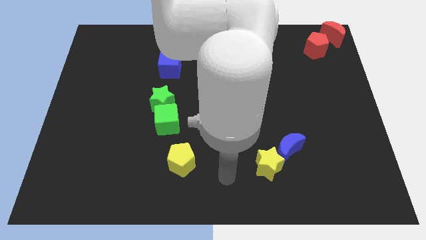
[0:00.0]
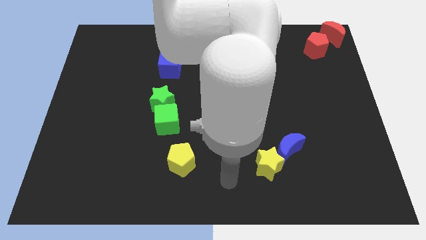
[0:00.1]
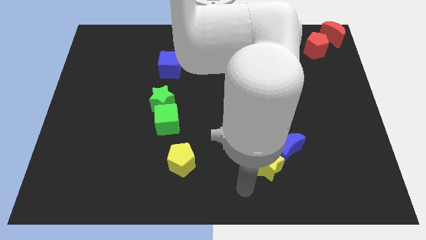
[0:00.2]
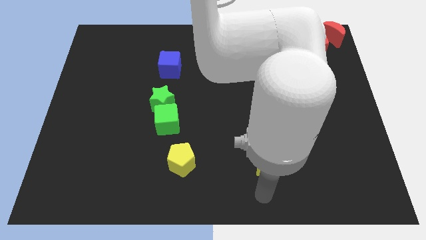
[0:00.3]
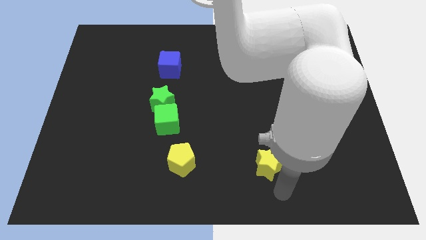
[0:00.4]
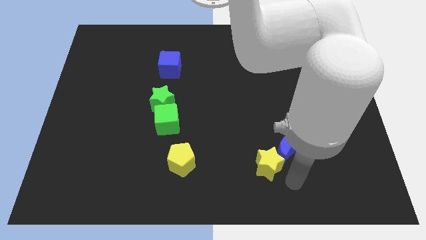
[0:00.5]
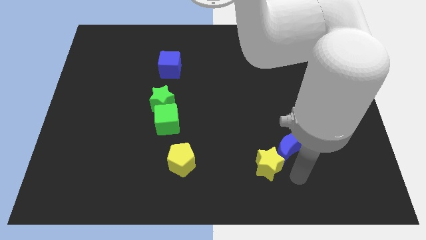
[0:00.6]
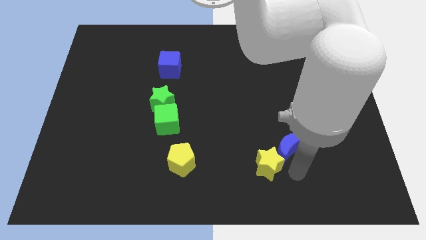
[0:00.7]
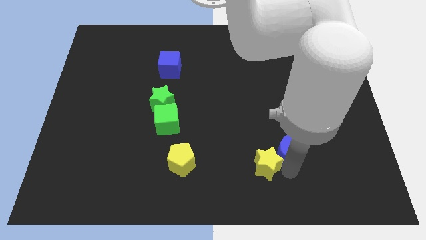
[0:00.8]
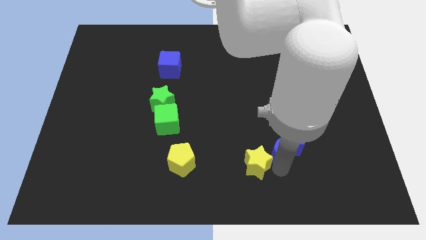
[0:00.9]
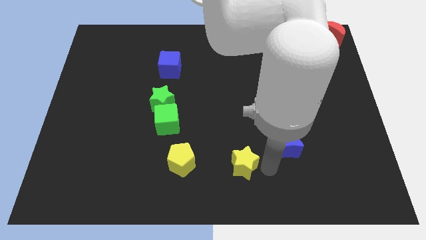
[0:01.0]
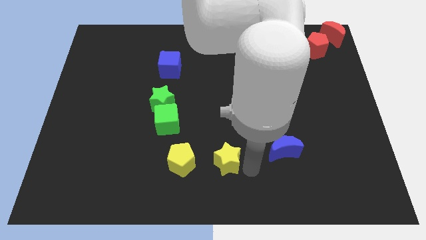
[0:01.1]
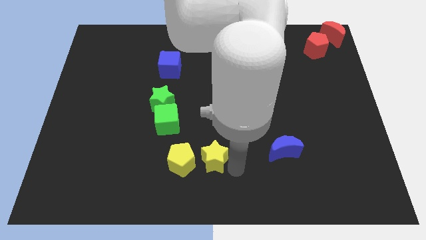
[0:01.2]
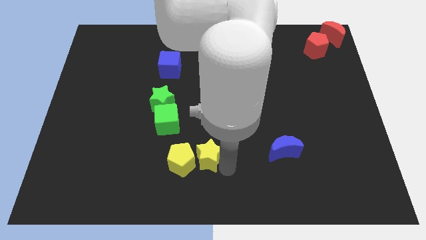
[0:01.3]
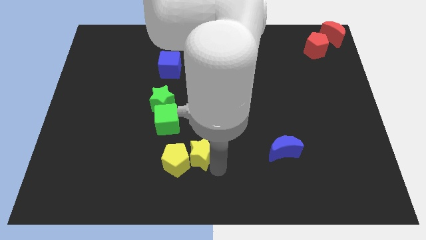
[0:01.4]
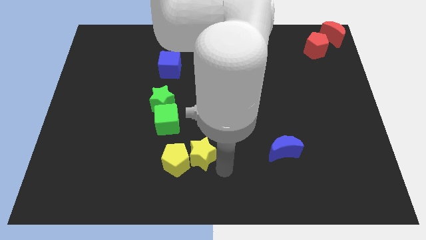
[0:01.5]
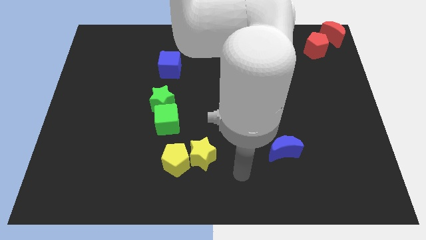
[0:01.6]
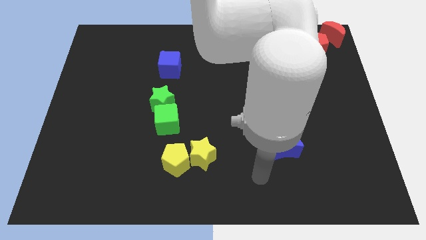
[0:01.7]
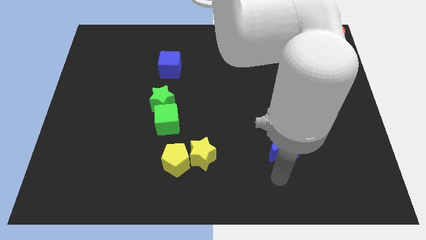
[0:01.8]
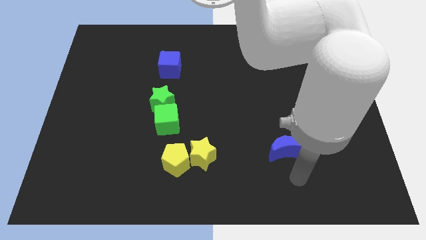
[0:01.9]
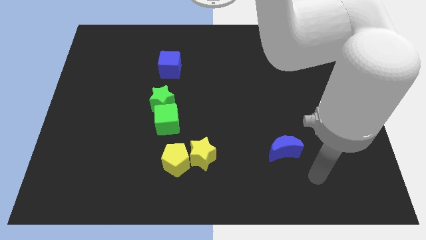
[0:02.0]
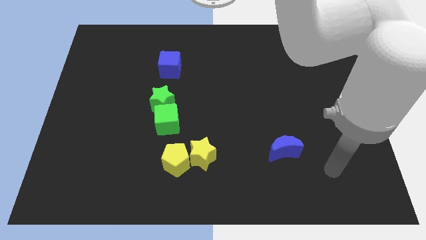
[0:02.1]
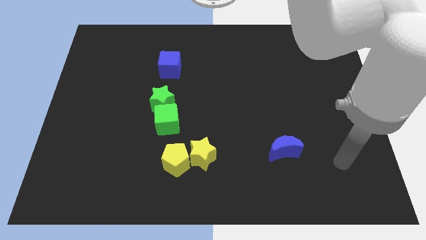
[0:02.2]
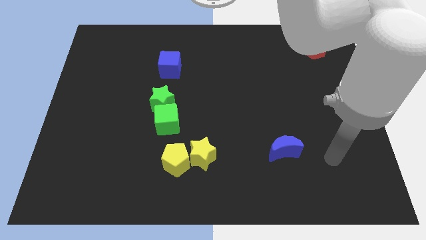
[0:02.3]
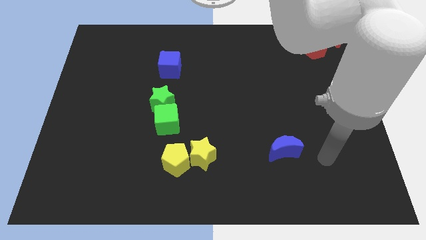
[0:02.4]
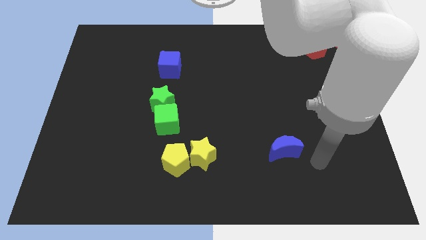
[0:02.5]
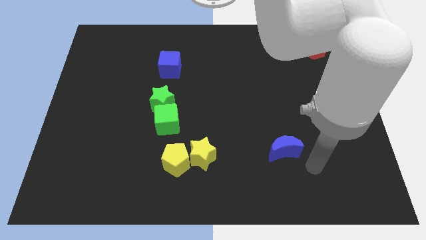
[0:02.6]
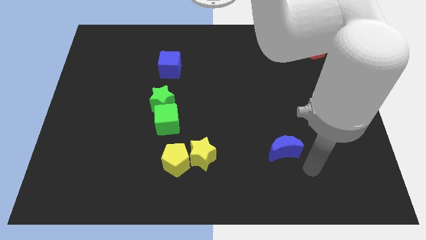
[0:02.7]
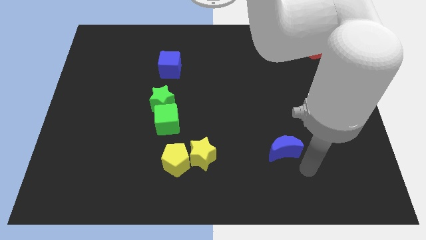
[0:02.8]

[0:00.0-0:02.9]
place the yellow star to the right of the yellow pentagon

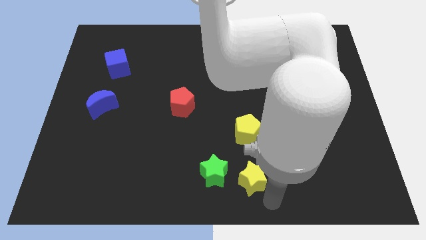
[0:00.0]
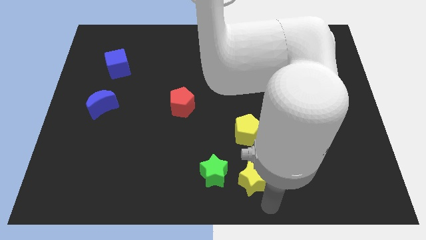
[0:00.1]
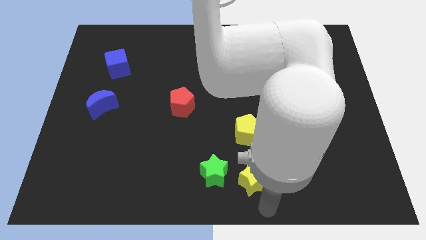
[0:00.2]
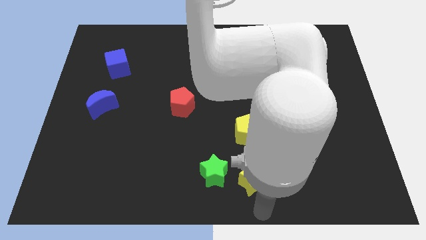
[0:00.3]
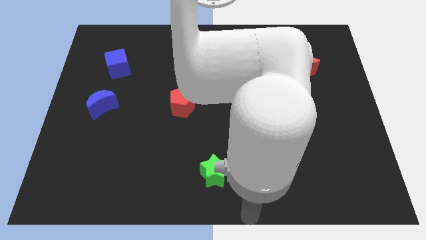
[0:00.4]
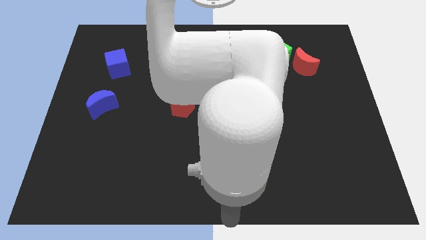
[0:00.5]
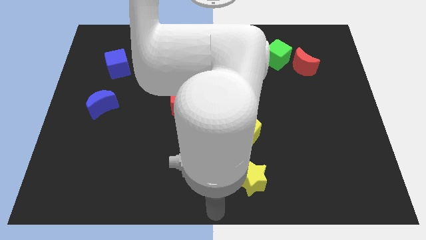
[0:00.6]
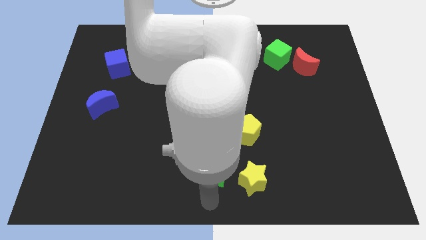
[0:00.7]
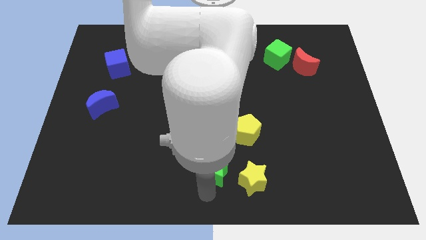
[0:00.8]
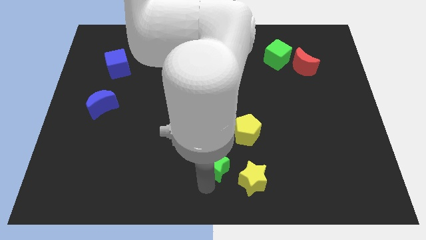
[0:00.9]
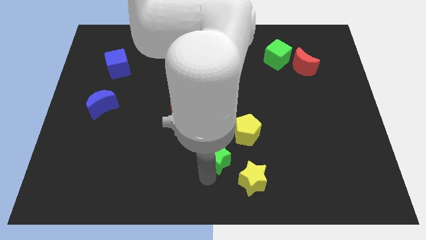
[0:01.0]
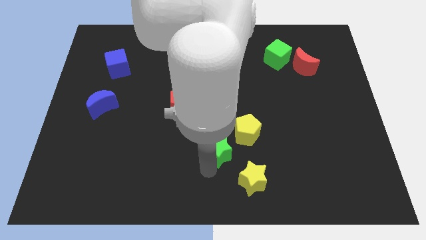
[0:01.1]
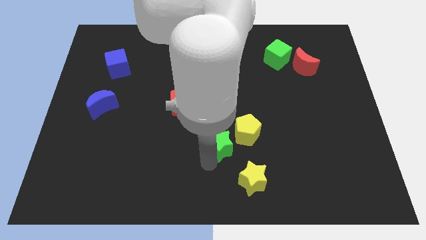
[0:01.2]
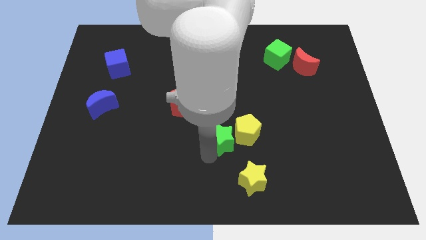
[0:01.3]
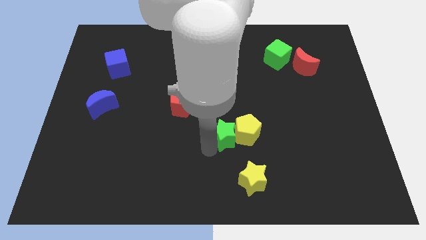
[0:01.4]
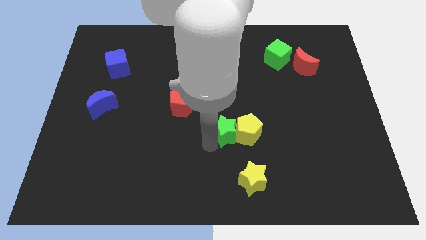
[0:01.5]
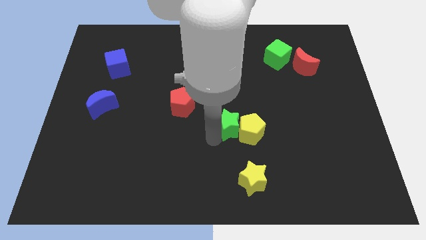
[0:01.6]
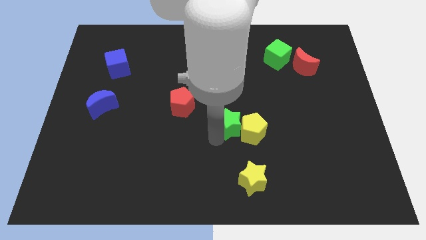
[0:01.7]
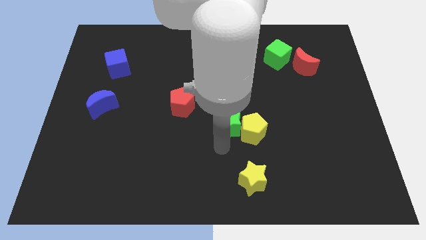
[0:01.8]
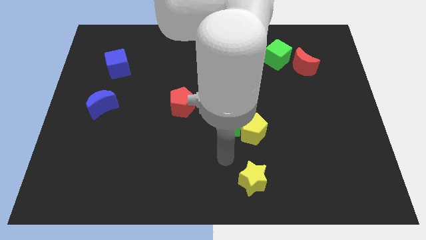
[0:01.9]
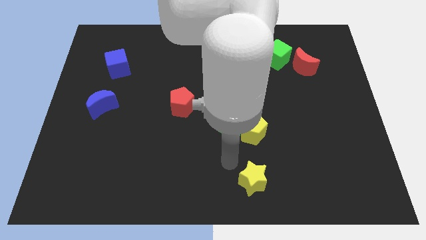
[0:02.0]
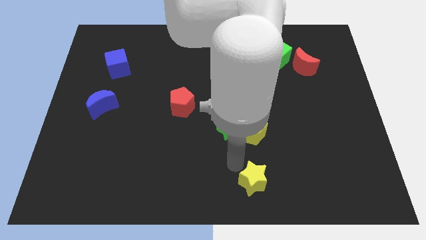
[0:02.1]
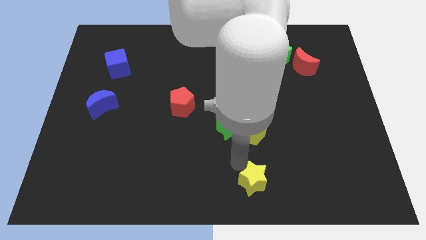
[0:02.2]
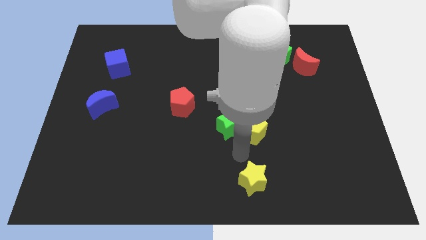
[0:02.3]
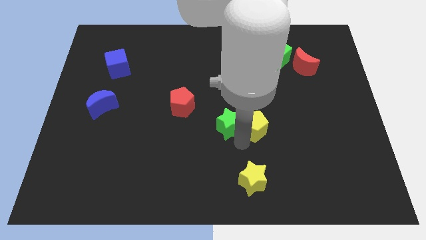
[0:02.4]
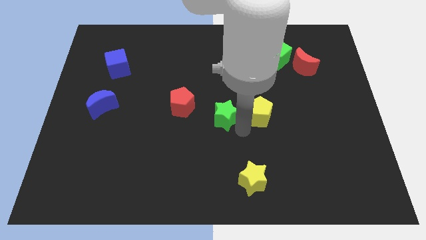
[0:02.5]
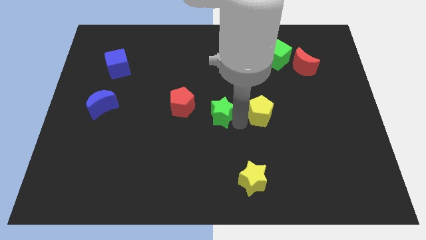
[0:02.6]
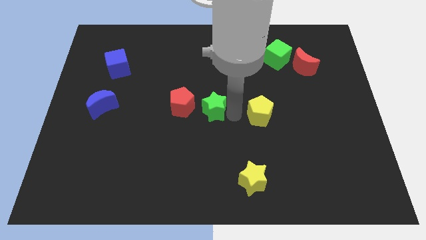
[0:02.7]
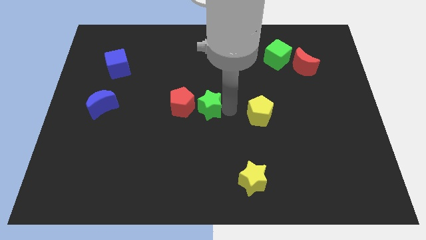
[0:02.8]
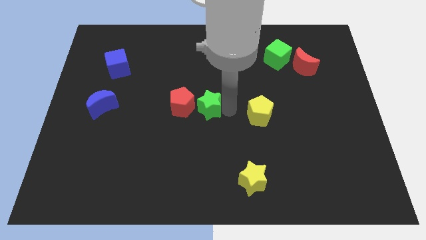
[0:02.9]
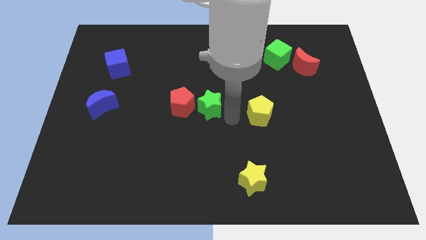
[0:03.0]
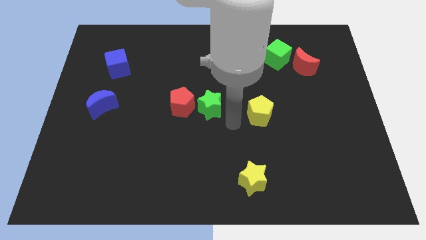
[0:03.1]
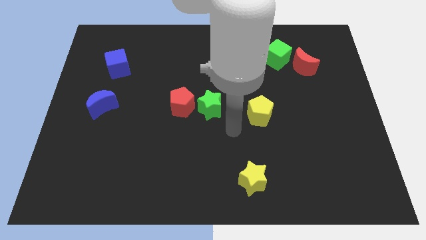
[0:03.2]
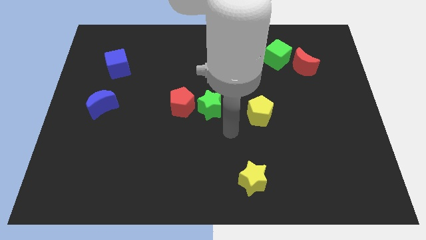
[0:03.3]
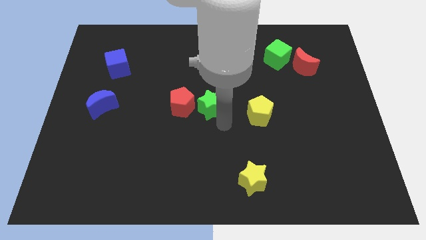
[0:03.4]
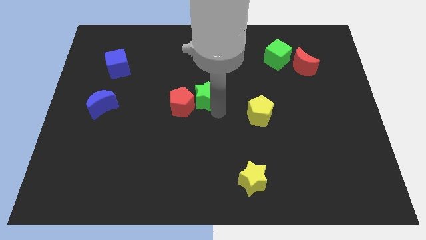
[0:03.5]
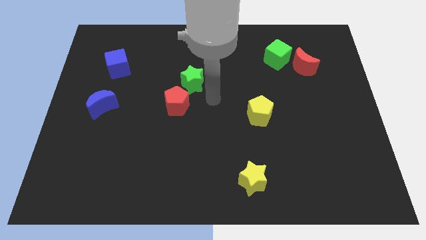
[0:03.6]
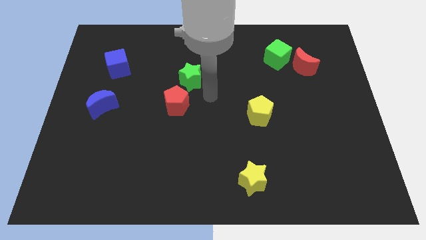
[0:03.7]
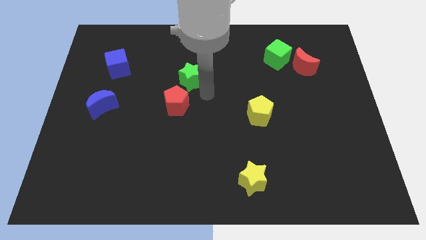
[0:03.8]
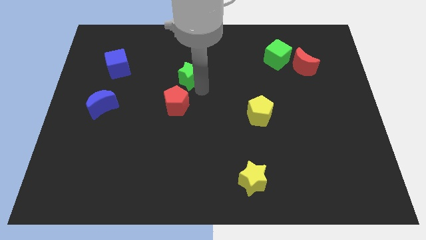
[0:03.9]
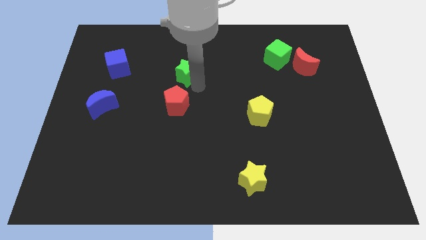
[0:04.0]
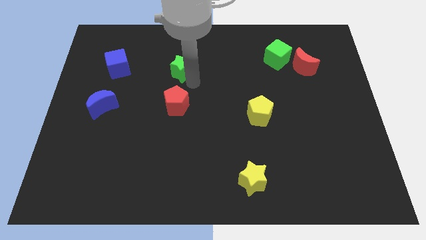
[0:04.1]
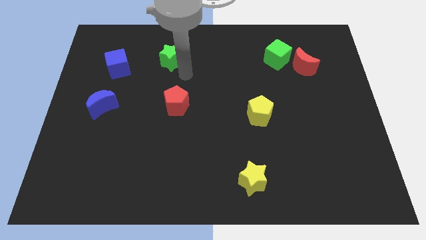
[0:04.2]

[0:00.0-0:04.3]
push green star above red pentagon

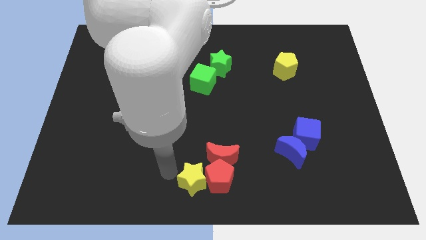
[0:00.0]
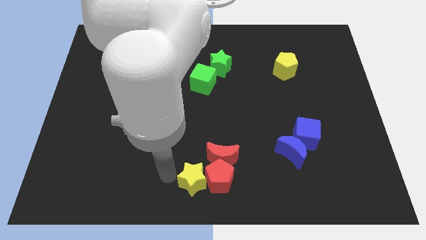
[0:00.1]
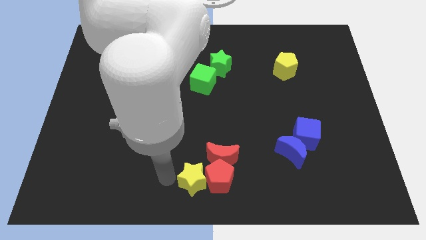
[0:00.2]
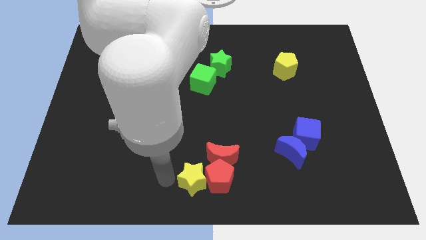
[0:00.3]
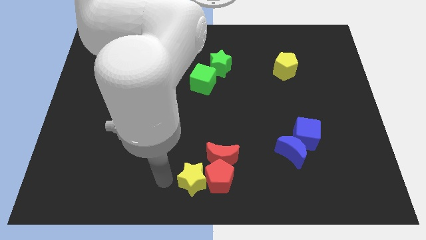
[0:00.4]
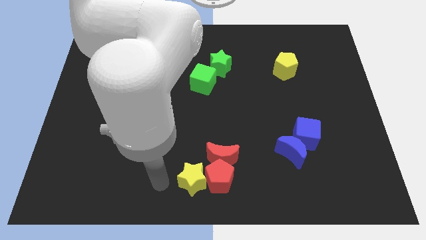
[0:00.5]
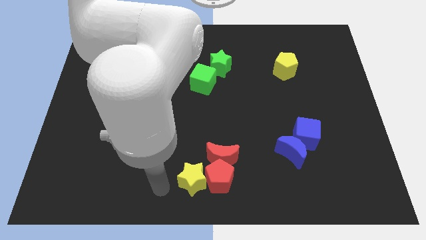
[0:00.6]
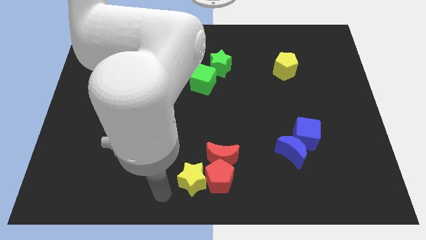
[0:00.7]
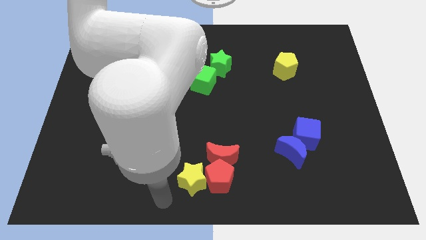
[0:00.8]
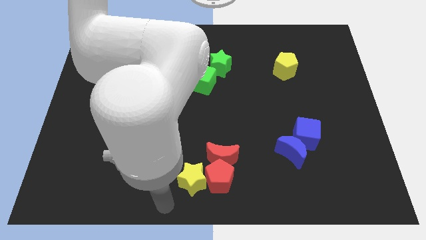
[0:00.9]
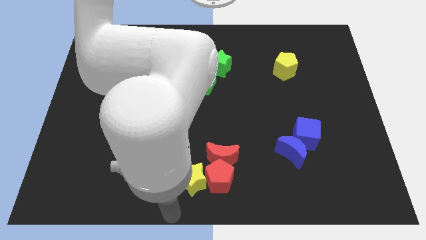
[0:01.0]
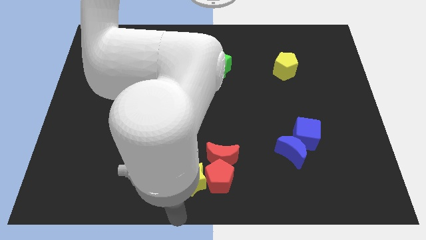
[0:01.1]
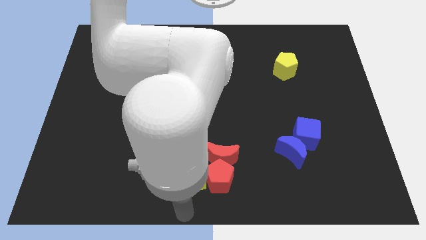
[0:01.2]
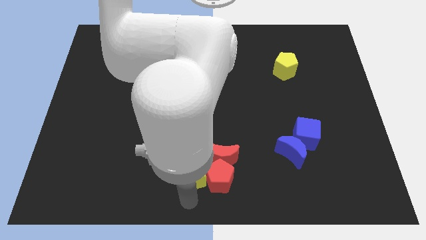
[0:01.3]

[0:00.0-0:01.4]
place your arm below the yellow star

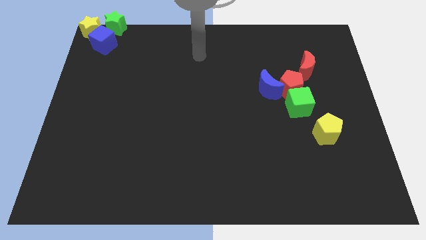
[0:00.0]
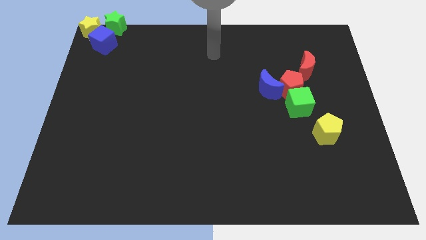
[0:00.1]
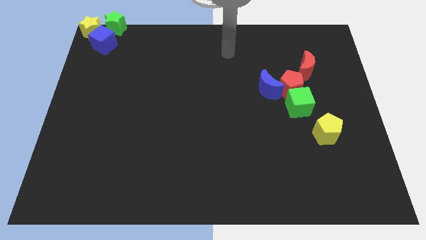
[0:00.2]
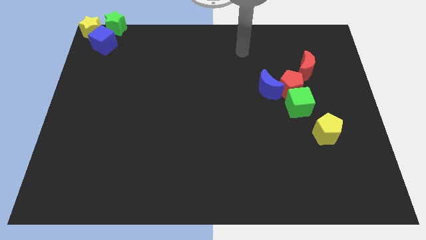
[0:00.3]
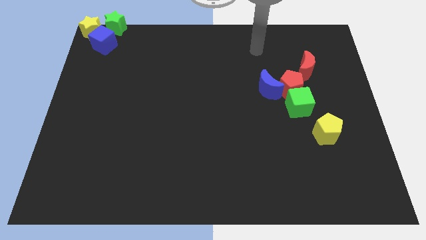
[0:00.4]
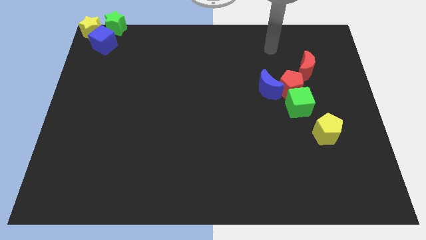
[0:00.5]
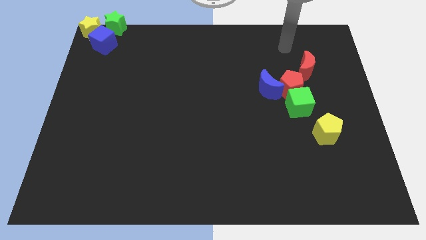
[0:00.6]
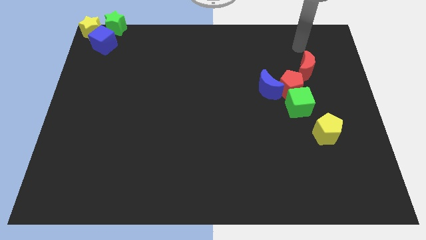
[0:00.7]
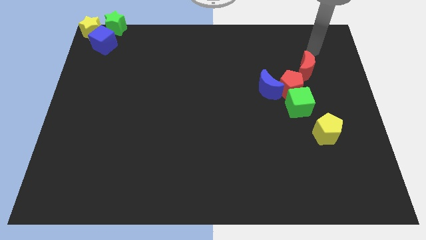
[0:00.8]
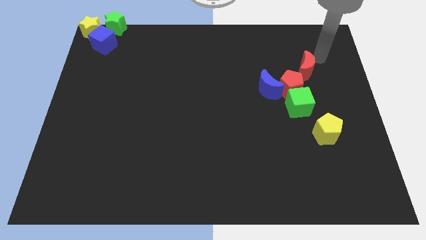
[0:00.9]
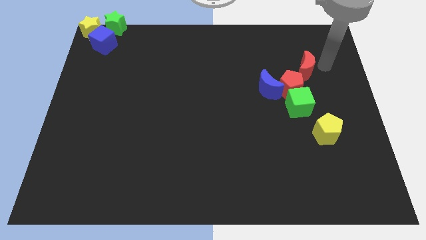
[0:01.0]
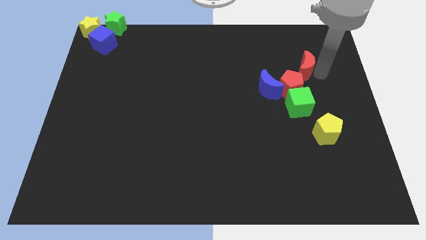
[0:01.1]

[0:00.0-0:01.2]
place your arm to the right of the red moon
